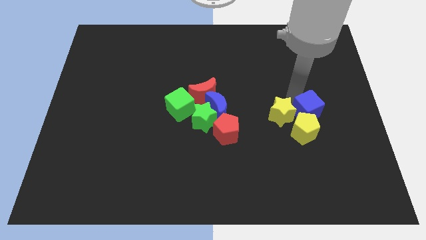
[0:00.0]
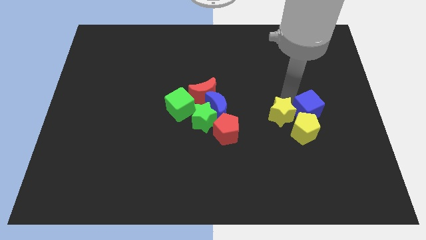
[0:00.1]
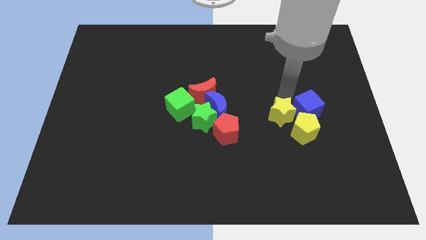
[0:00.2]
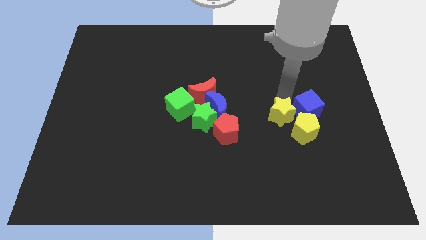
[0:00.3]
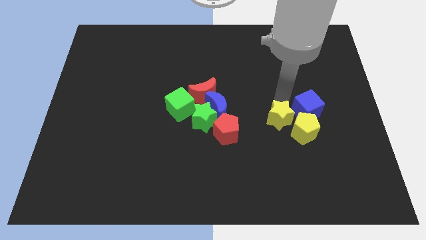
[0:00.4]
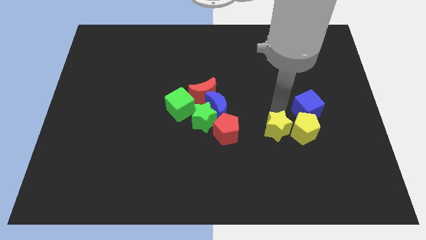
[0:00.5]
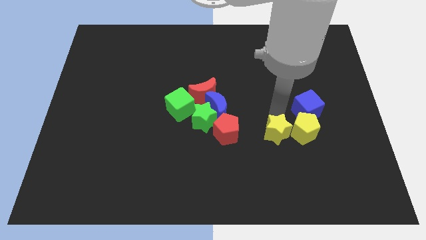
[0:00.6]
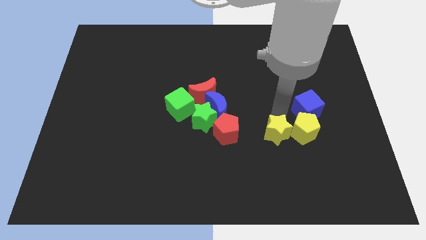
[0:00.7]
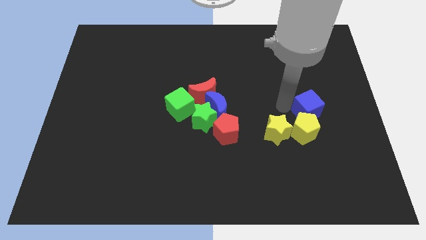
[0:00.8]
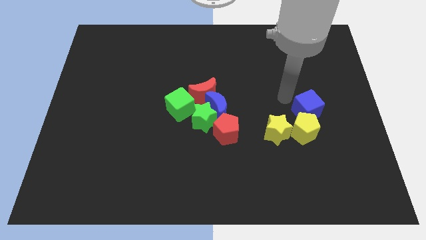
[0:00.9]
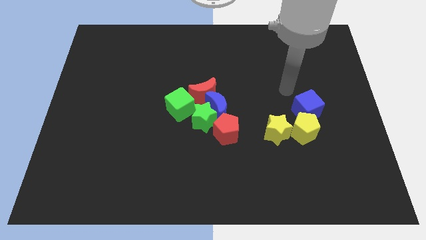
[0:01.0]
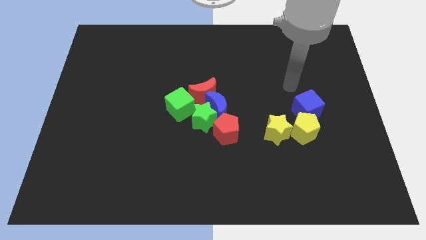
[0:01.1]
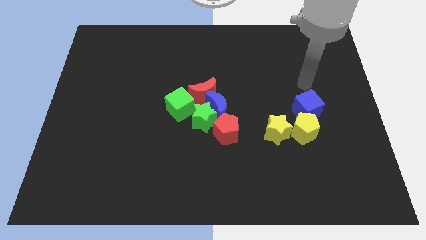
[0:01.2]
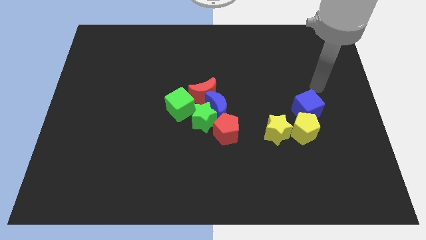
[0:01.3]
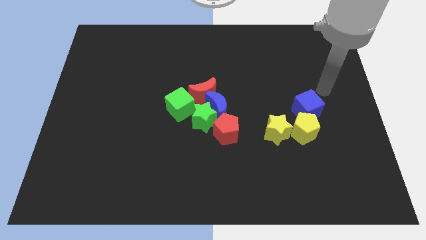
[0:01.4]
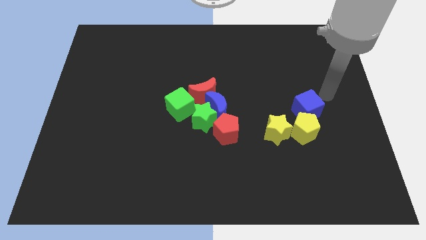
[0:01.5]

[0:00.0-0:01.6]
place yellow star at the left side of the yellow pentagon

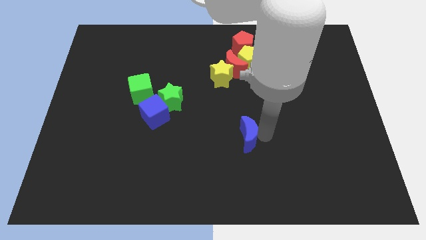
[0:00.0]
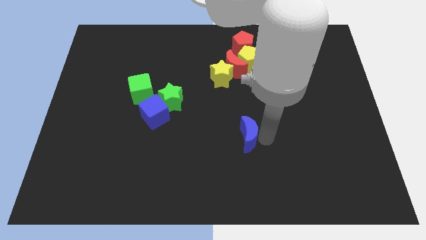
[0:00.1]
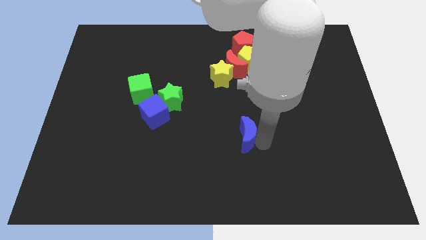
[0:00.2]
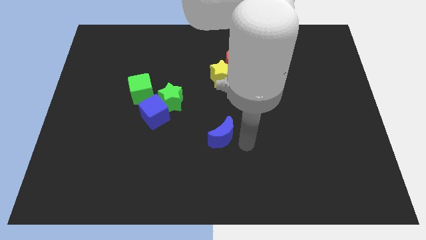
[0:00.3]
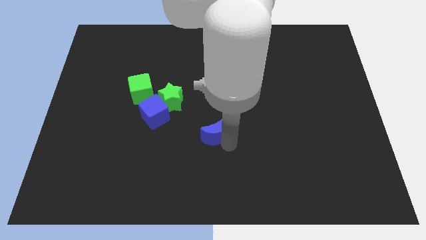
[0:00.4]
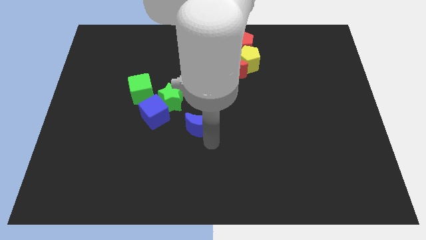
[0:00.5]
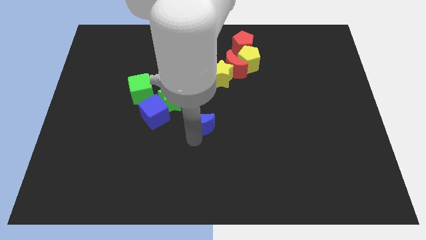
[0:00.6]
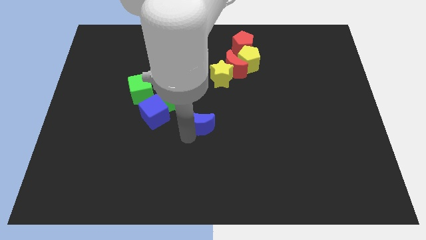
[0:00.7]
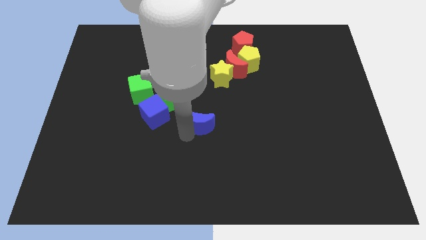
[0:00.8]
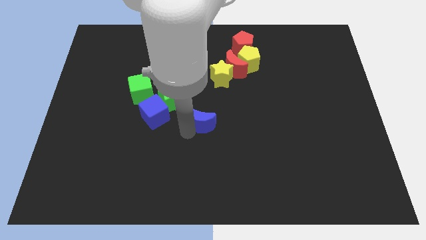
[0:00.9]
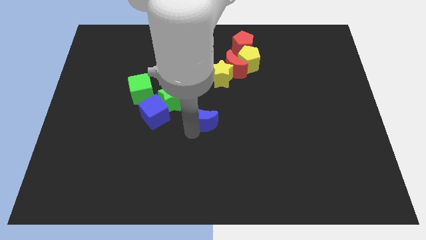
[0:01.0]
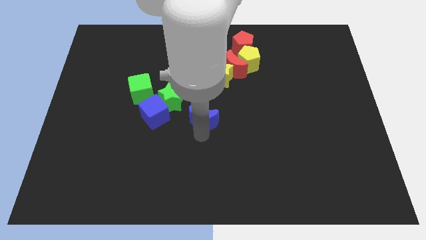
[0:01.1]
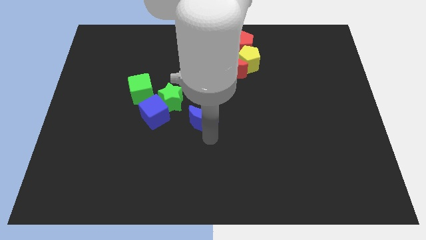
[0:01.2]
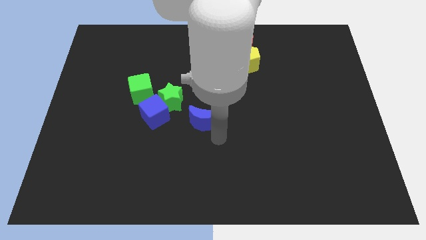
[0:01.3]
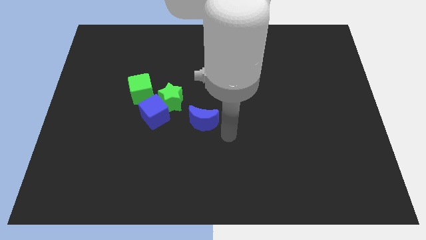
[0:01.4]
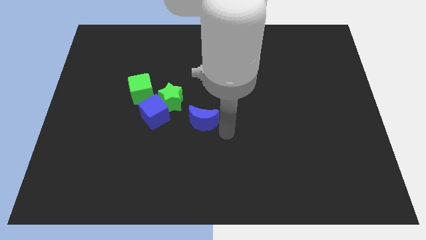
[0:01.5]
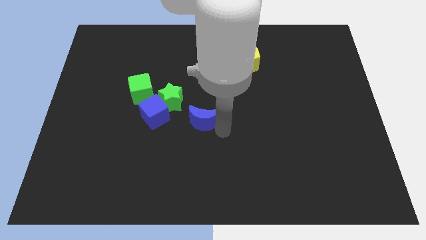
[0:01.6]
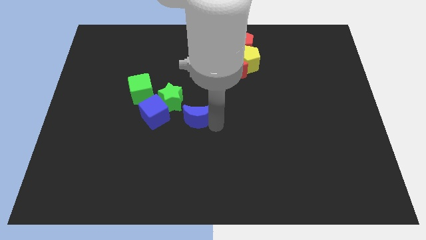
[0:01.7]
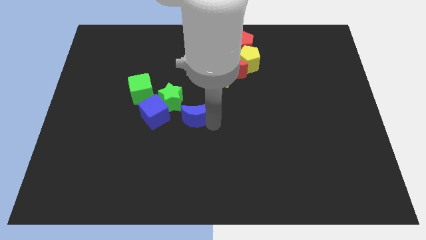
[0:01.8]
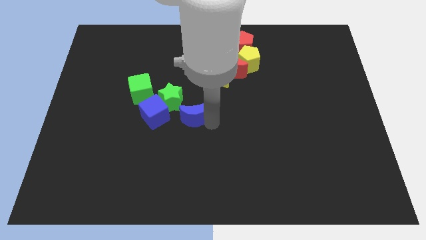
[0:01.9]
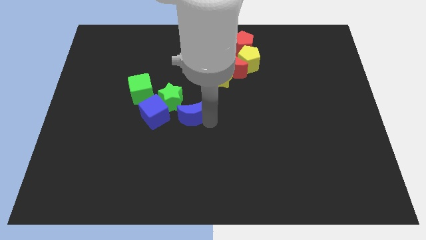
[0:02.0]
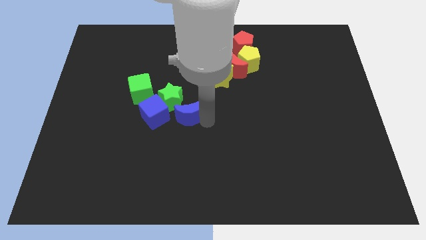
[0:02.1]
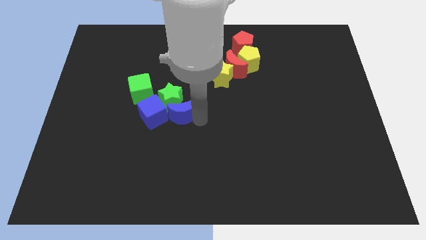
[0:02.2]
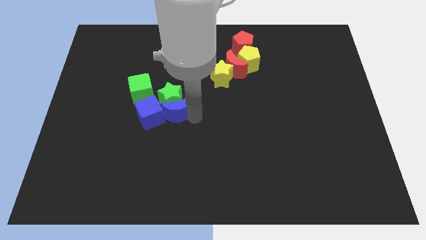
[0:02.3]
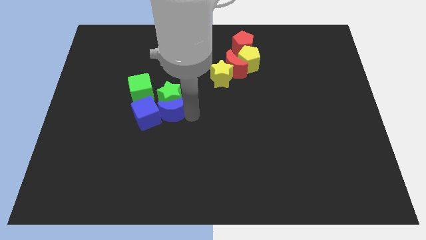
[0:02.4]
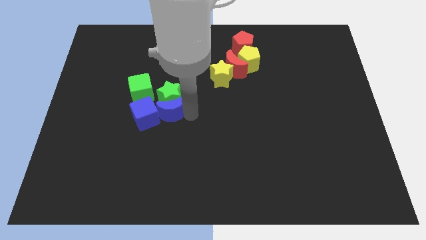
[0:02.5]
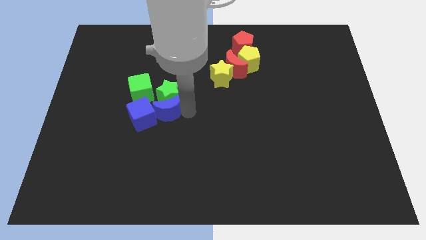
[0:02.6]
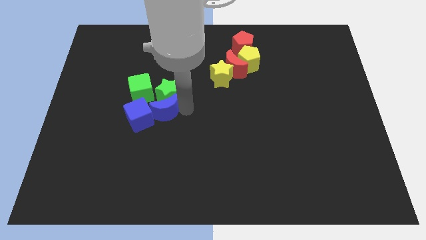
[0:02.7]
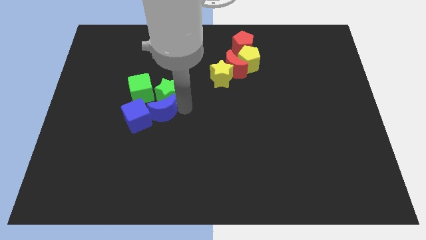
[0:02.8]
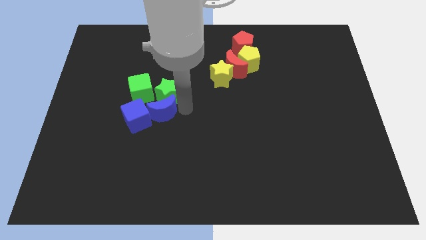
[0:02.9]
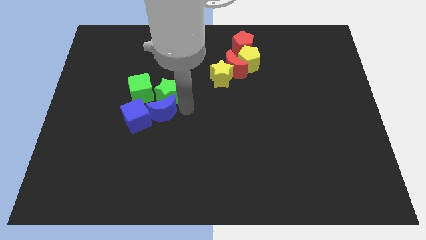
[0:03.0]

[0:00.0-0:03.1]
push the blue moon into the group of blocks

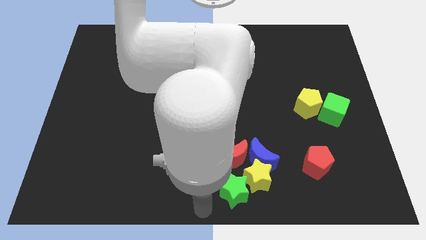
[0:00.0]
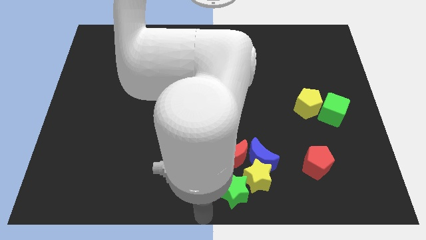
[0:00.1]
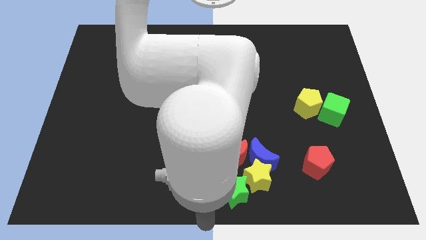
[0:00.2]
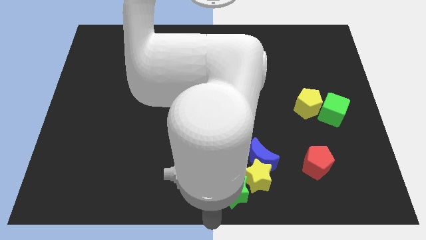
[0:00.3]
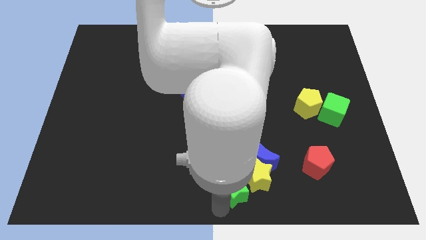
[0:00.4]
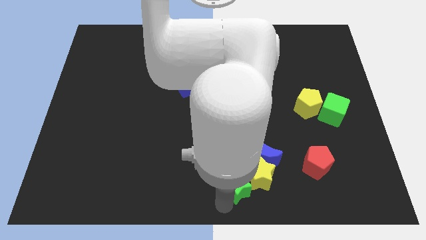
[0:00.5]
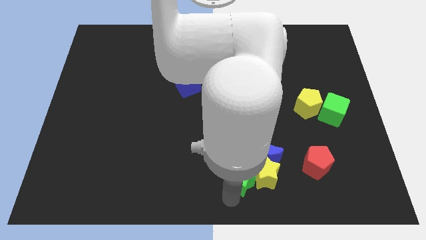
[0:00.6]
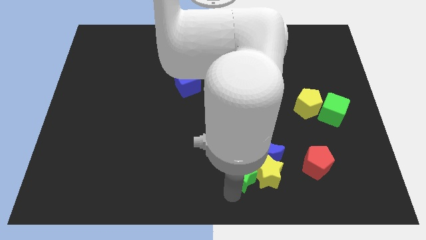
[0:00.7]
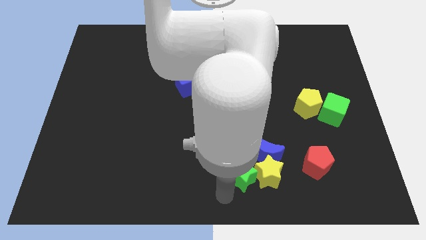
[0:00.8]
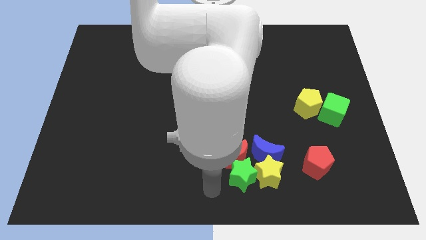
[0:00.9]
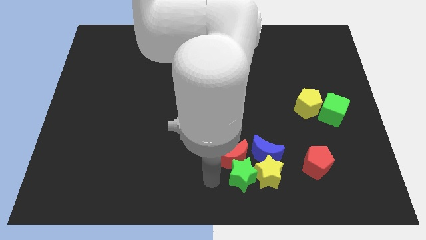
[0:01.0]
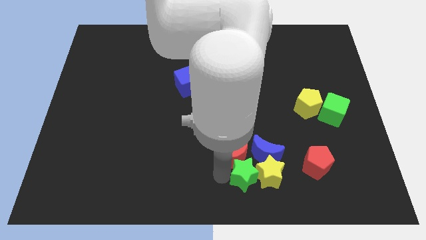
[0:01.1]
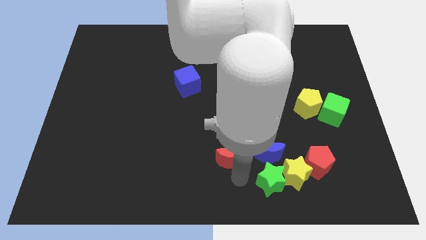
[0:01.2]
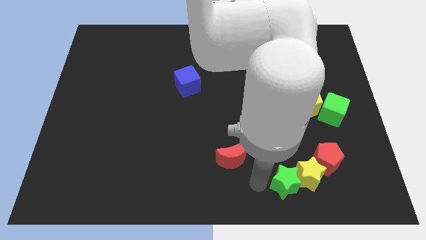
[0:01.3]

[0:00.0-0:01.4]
place the green star to the left of the yellow star

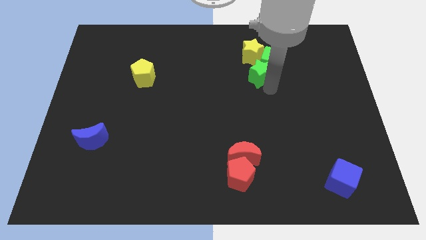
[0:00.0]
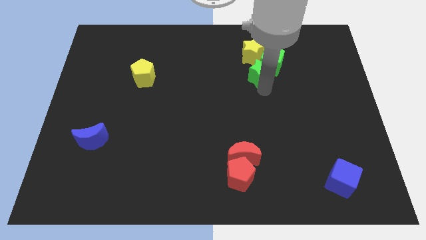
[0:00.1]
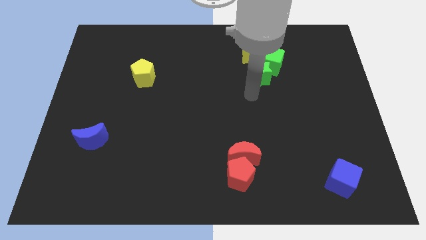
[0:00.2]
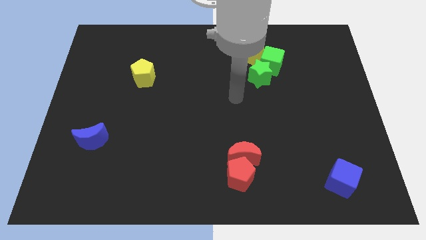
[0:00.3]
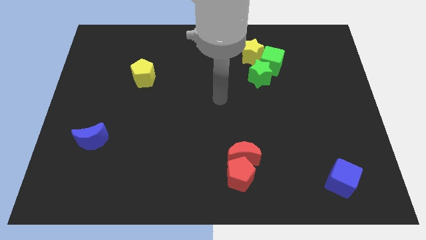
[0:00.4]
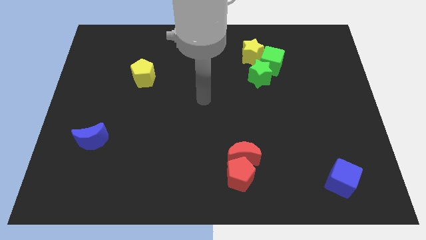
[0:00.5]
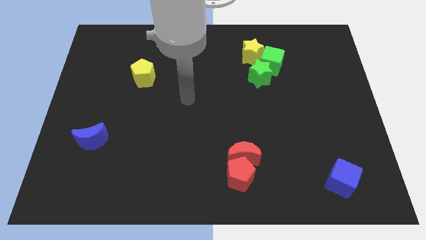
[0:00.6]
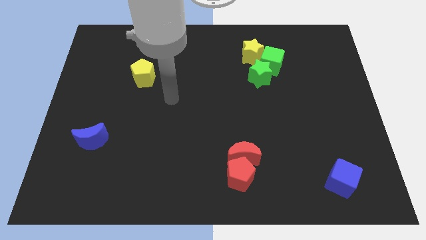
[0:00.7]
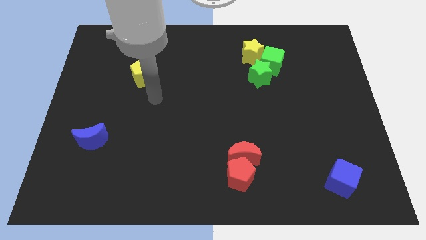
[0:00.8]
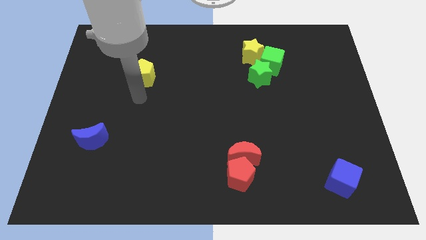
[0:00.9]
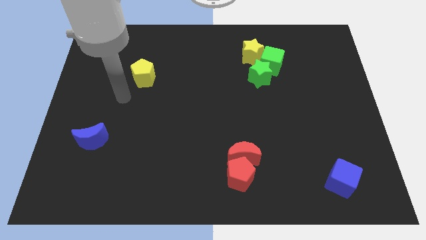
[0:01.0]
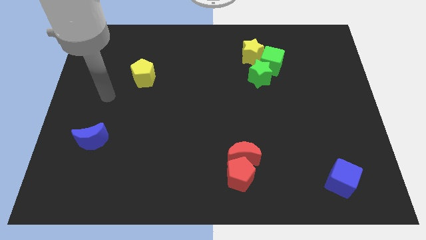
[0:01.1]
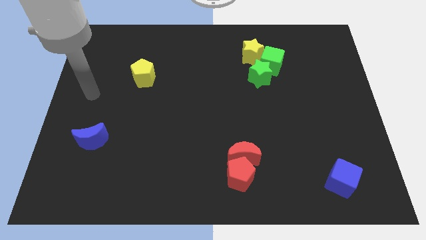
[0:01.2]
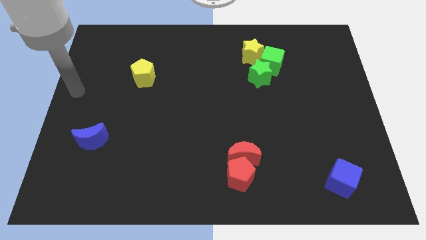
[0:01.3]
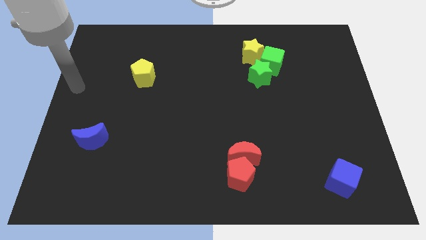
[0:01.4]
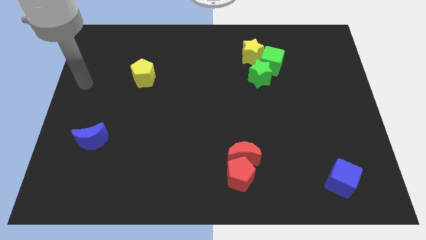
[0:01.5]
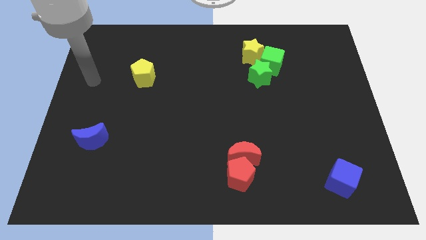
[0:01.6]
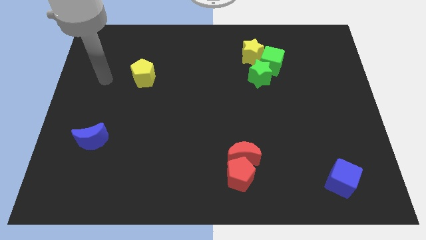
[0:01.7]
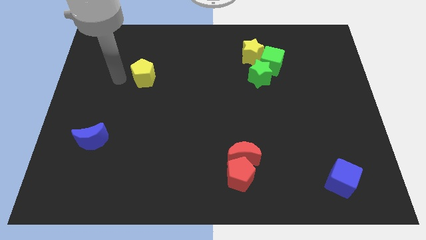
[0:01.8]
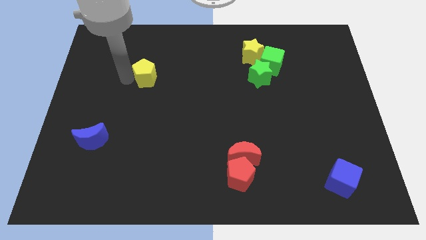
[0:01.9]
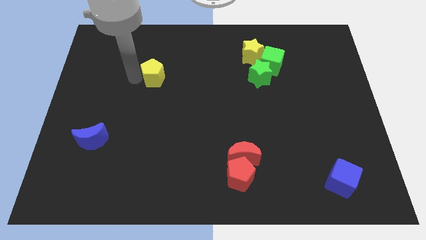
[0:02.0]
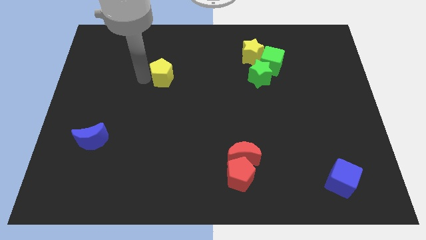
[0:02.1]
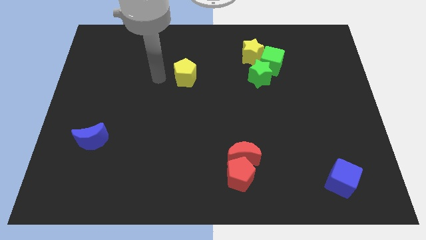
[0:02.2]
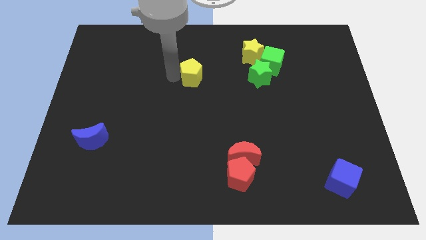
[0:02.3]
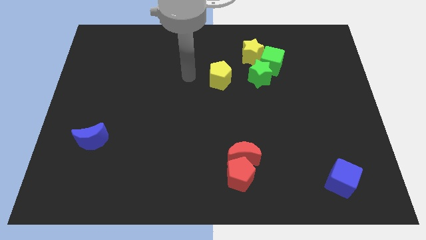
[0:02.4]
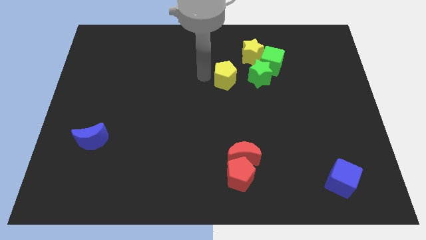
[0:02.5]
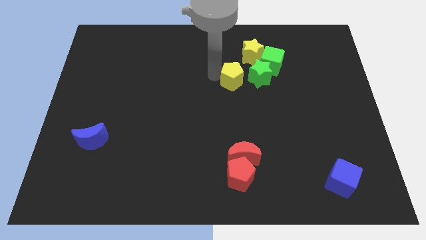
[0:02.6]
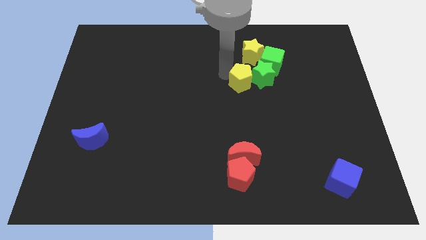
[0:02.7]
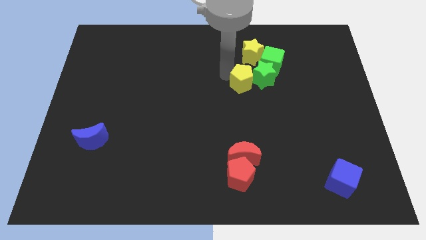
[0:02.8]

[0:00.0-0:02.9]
place the yellow pentagon left of the green star
